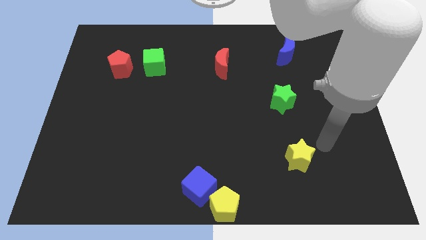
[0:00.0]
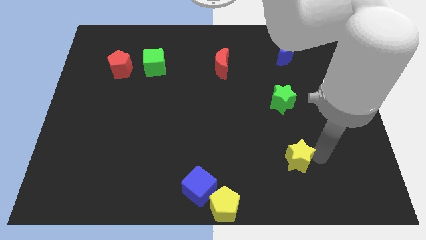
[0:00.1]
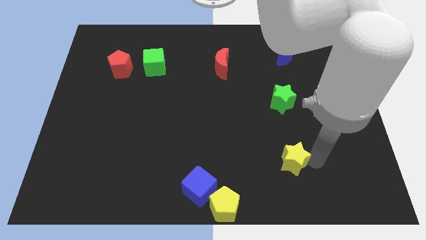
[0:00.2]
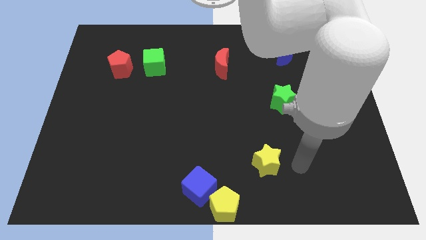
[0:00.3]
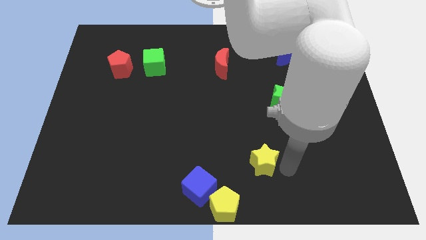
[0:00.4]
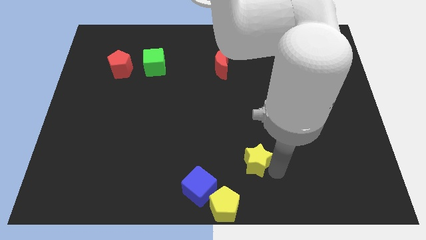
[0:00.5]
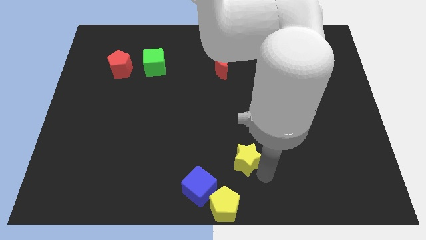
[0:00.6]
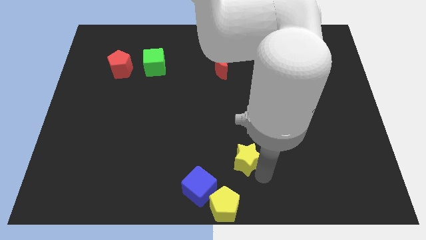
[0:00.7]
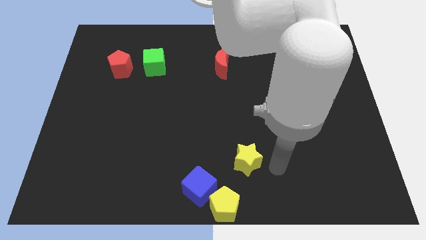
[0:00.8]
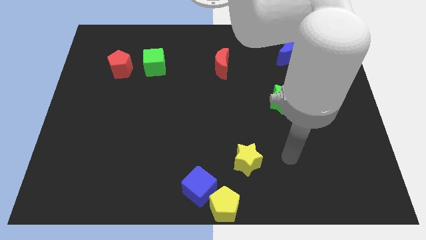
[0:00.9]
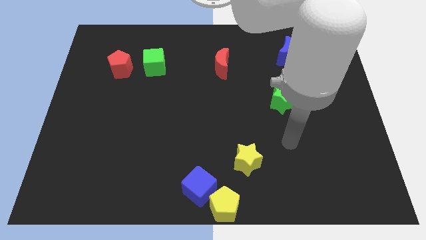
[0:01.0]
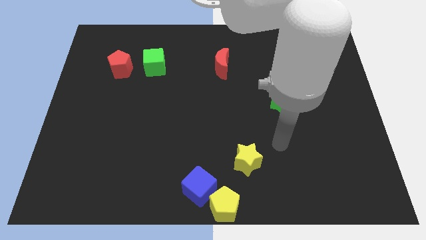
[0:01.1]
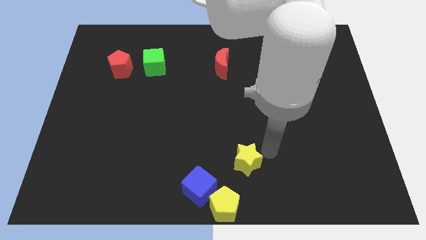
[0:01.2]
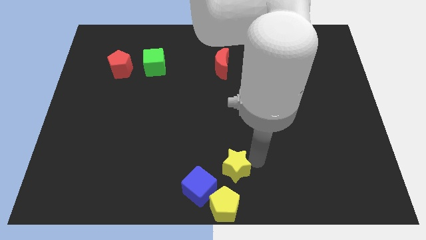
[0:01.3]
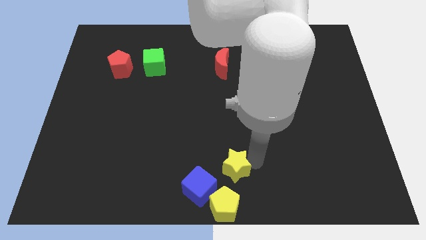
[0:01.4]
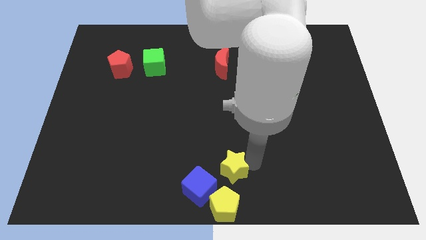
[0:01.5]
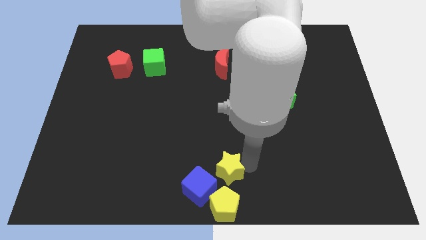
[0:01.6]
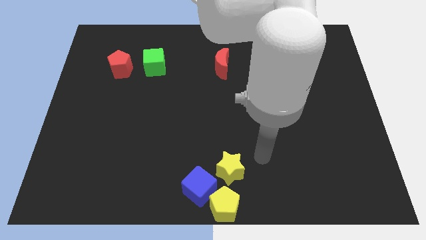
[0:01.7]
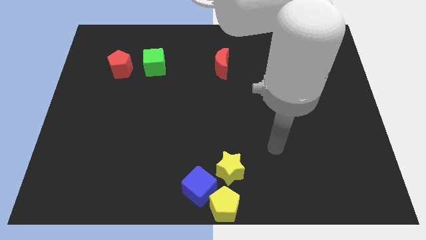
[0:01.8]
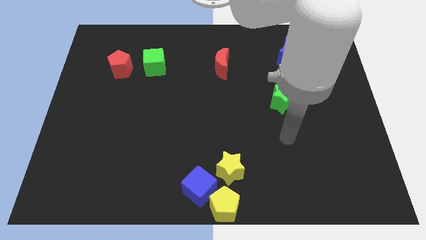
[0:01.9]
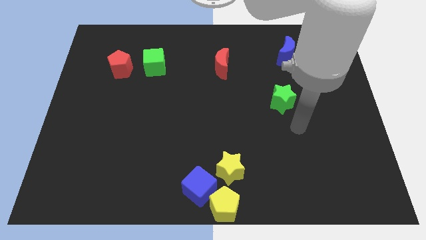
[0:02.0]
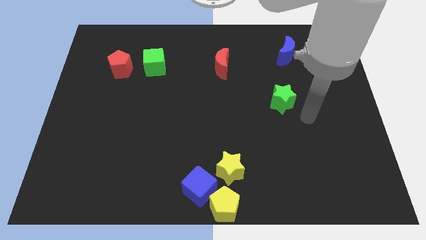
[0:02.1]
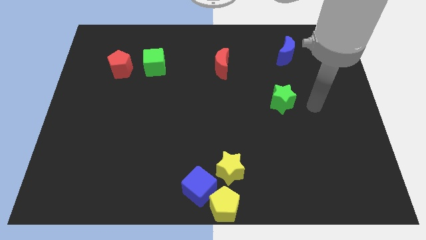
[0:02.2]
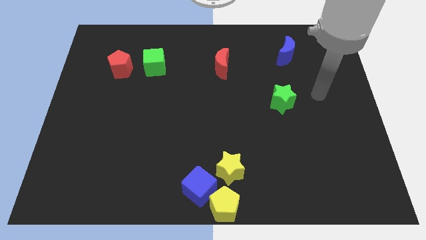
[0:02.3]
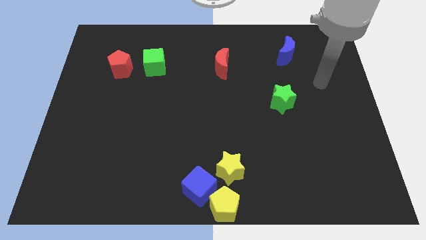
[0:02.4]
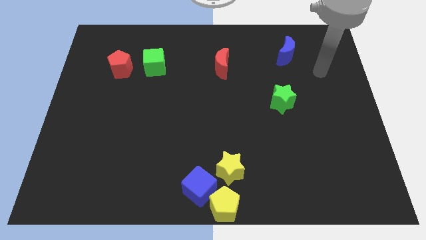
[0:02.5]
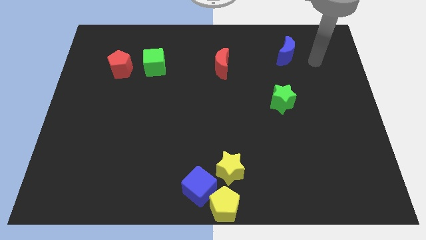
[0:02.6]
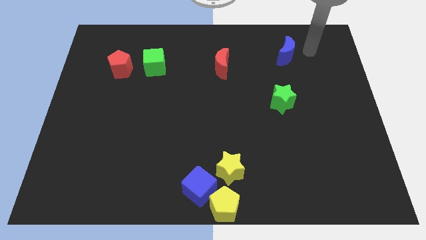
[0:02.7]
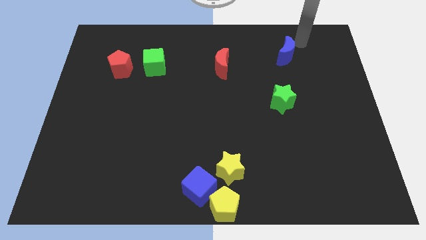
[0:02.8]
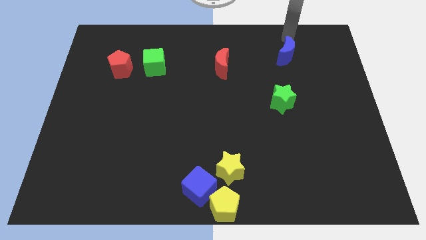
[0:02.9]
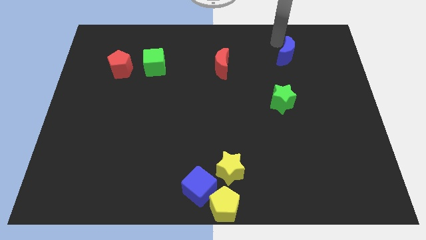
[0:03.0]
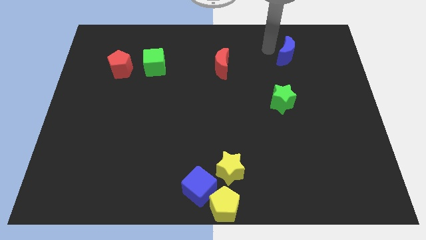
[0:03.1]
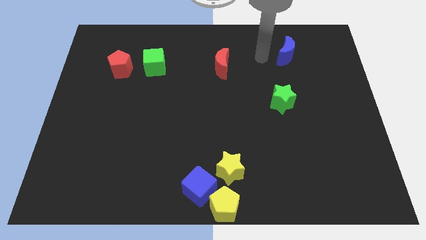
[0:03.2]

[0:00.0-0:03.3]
push the yellow star above the yellow pentagon

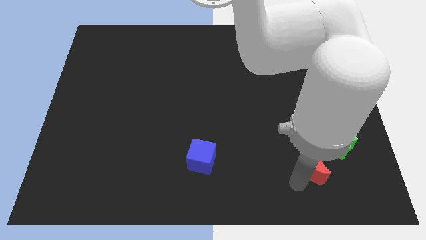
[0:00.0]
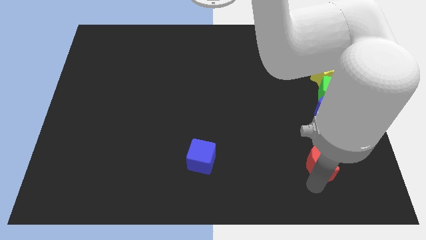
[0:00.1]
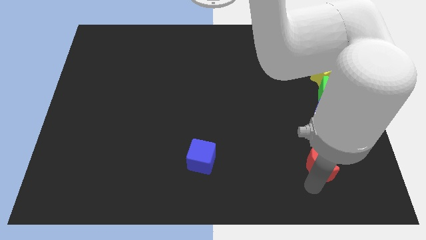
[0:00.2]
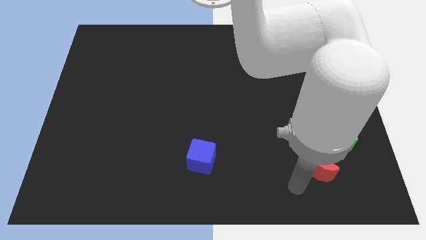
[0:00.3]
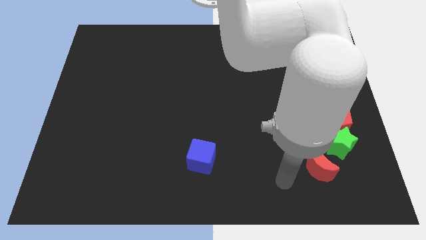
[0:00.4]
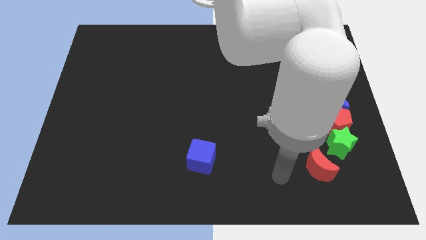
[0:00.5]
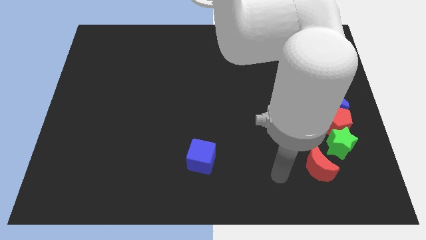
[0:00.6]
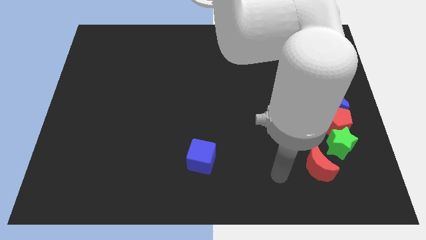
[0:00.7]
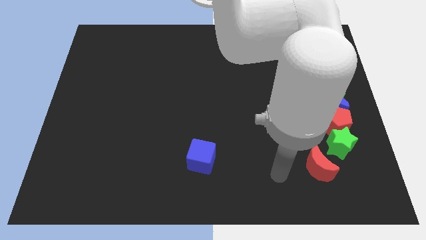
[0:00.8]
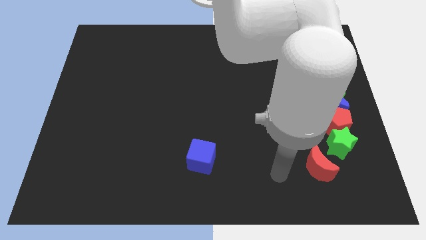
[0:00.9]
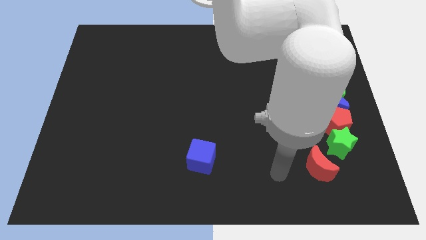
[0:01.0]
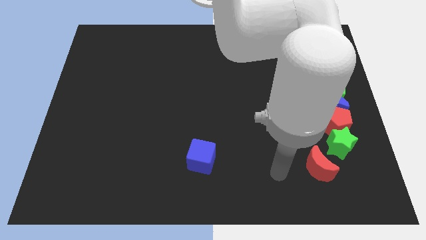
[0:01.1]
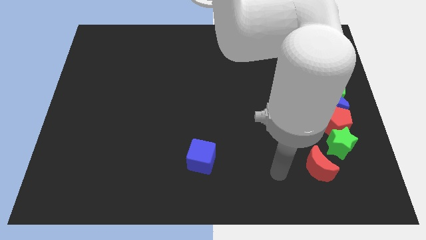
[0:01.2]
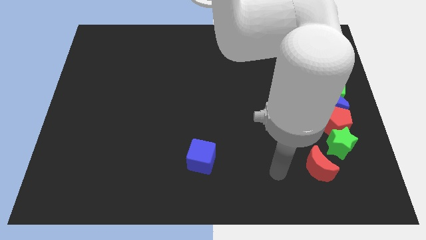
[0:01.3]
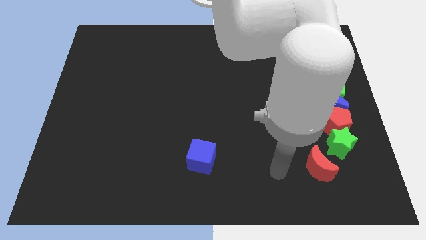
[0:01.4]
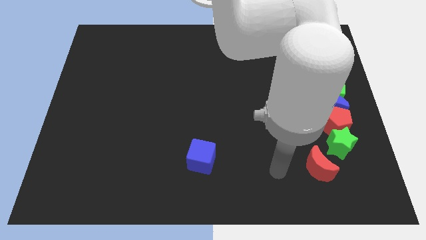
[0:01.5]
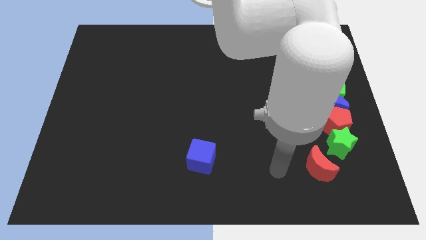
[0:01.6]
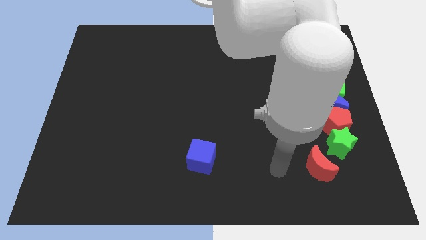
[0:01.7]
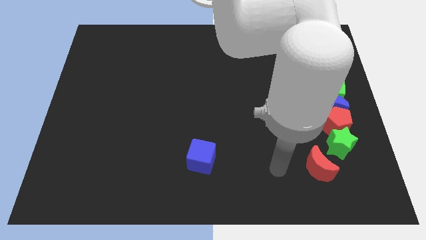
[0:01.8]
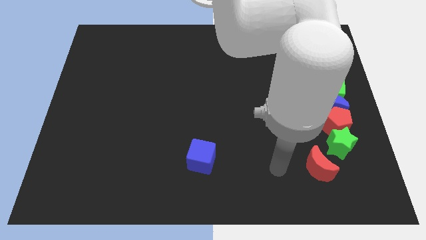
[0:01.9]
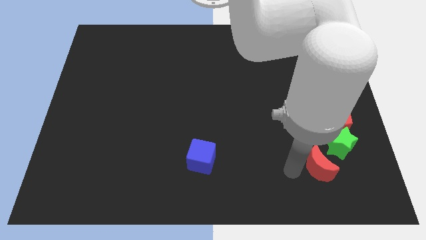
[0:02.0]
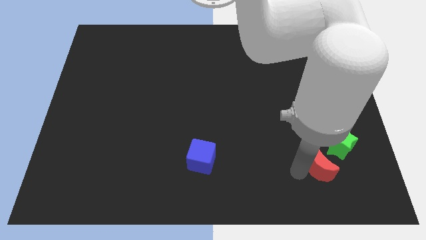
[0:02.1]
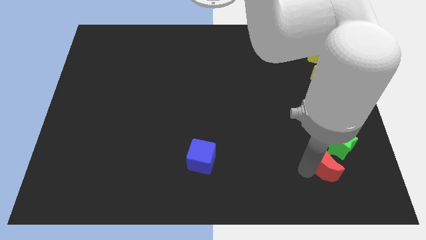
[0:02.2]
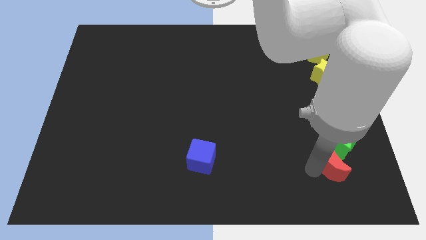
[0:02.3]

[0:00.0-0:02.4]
place the red moon below the green star

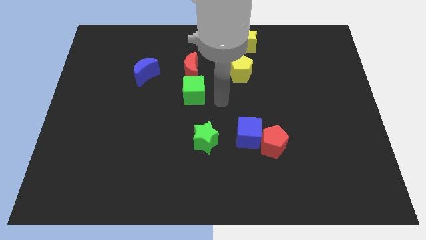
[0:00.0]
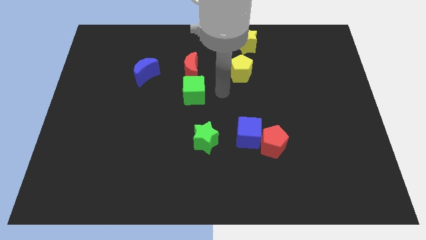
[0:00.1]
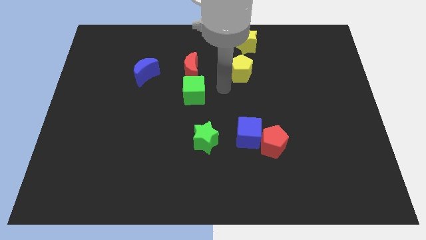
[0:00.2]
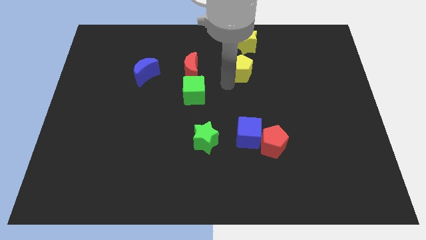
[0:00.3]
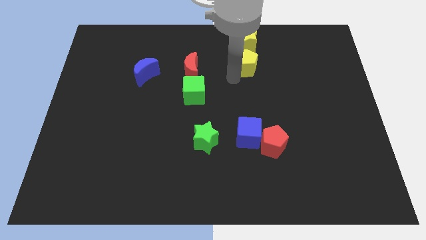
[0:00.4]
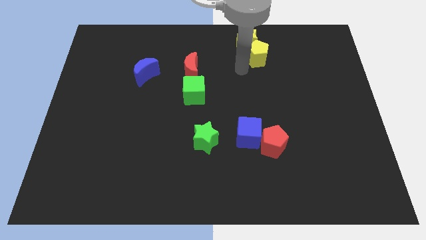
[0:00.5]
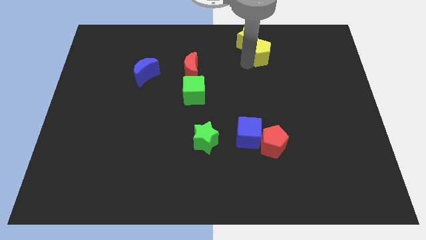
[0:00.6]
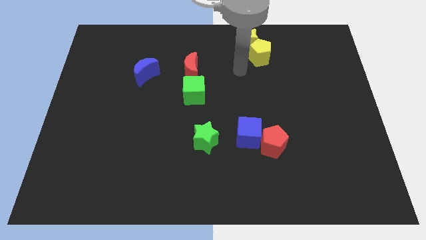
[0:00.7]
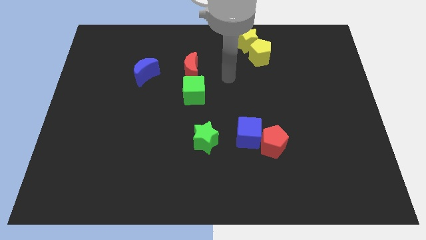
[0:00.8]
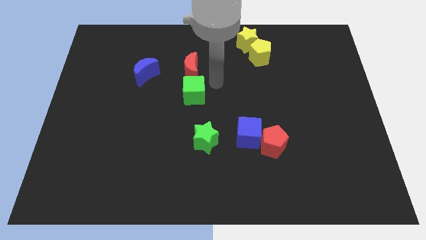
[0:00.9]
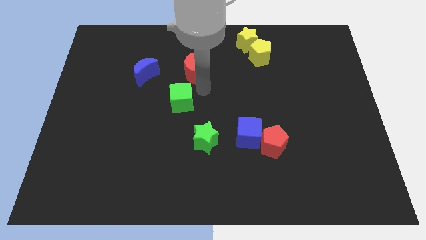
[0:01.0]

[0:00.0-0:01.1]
slide the yellow pentagon close to the yellow star

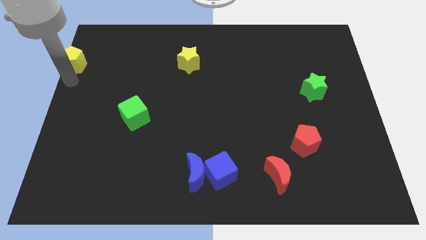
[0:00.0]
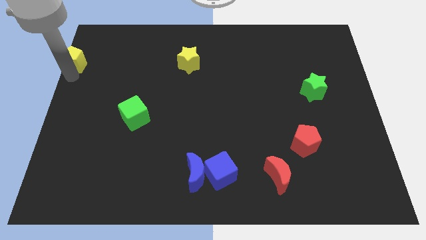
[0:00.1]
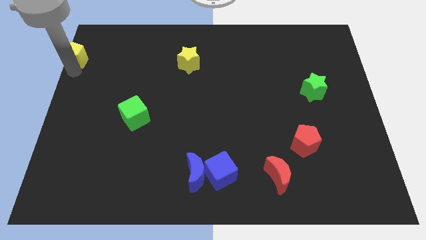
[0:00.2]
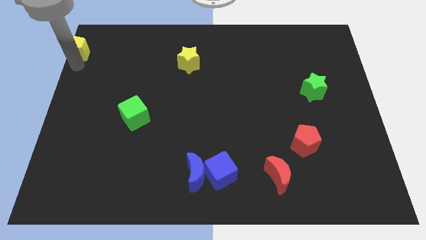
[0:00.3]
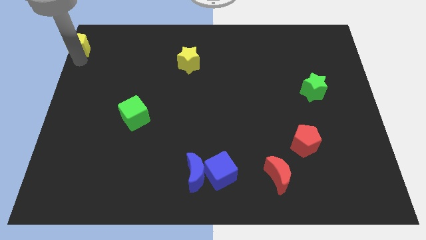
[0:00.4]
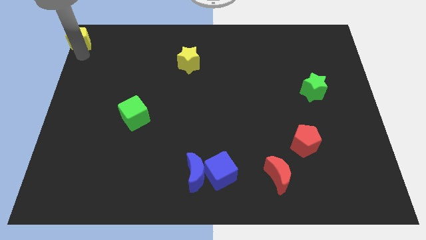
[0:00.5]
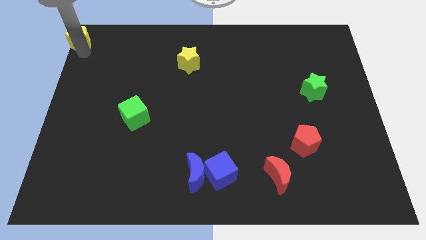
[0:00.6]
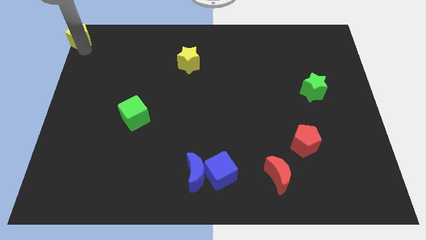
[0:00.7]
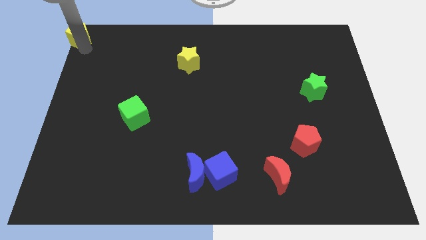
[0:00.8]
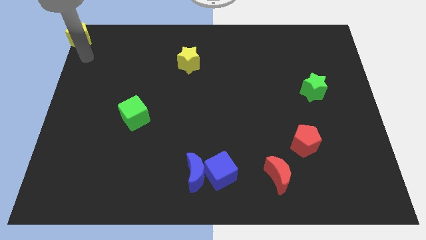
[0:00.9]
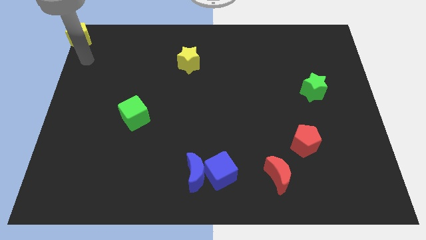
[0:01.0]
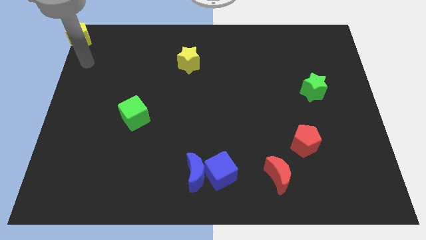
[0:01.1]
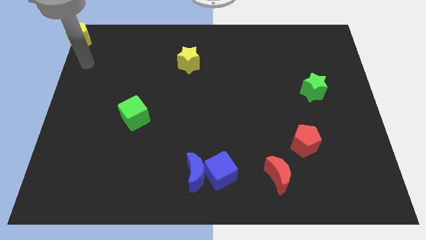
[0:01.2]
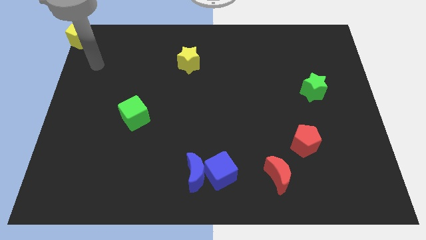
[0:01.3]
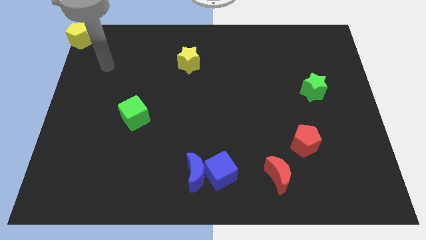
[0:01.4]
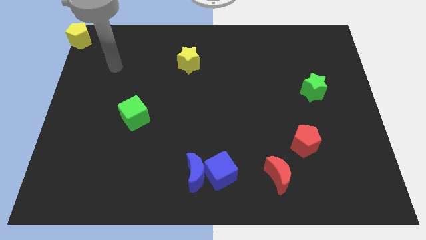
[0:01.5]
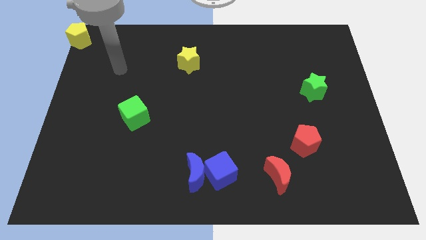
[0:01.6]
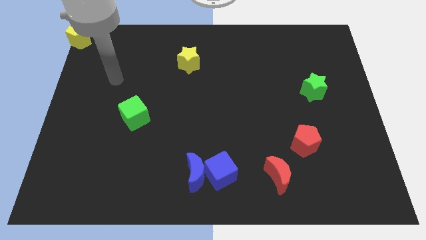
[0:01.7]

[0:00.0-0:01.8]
place the yellow pentagon at the top left center

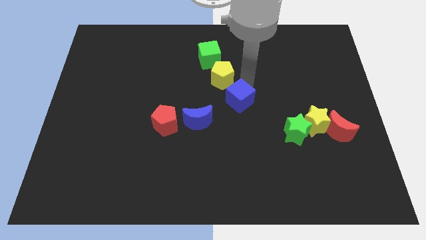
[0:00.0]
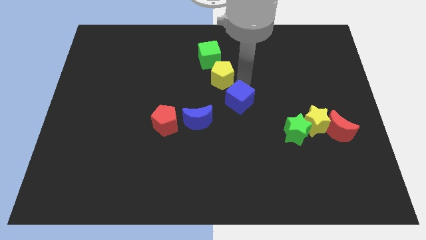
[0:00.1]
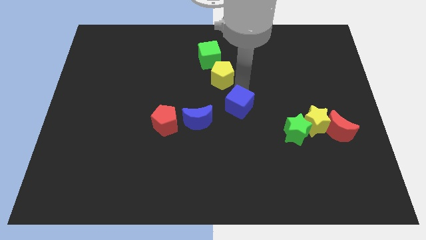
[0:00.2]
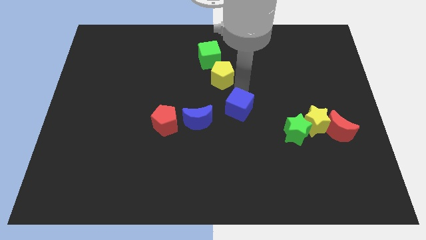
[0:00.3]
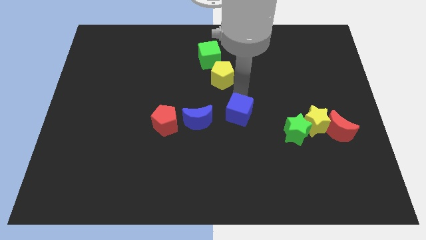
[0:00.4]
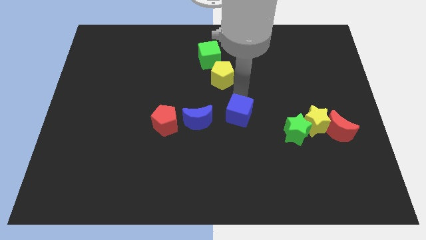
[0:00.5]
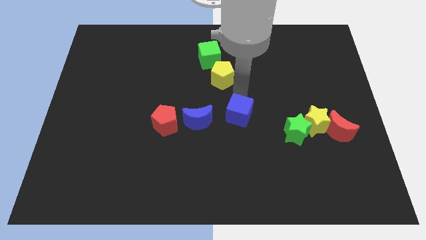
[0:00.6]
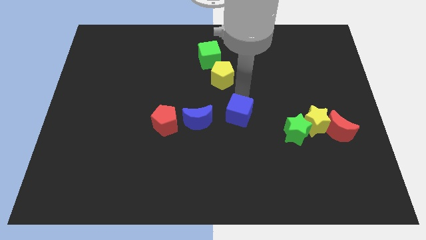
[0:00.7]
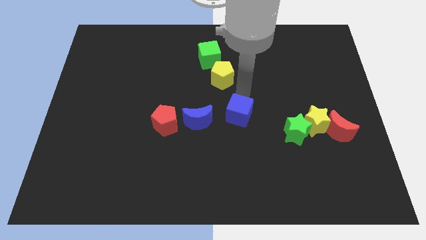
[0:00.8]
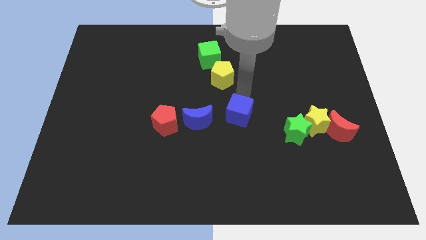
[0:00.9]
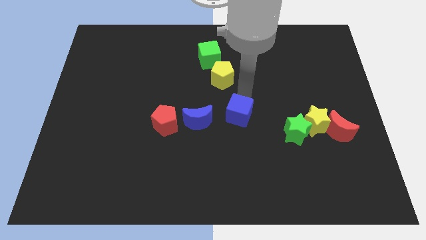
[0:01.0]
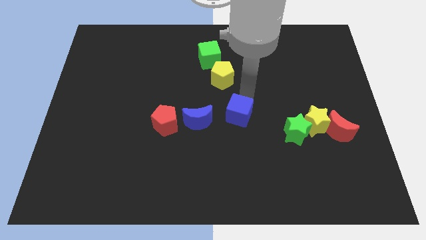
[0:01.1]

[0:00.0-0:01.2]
move the blue cube parallel to the right of the blue crescent
